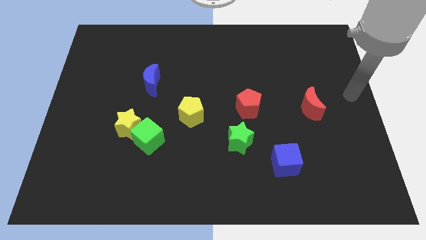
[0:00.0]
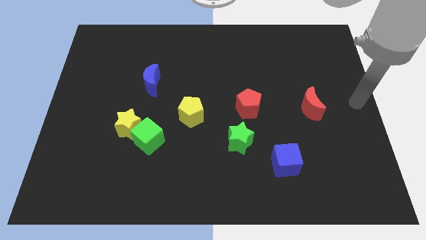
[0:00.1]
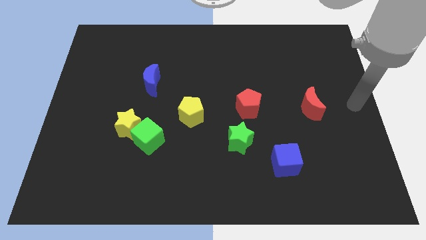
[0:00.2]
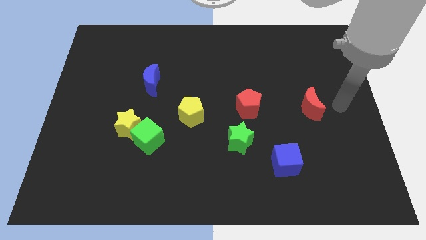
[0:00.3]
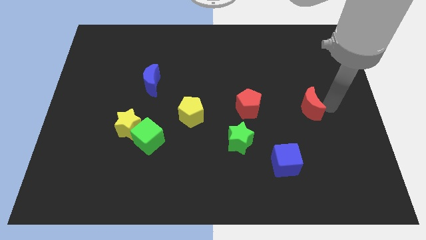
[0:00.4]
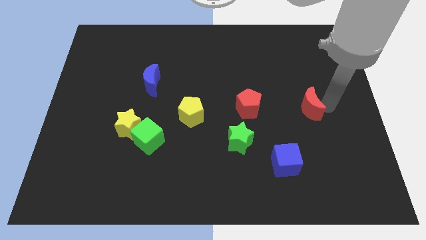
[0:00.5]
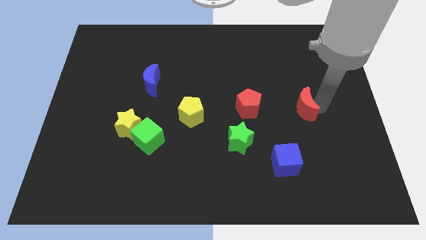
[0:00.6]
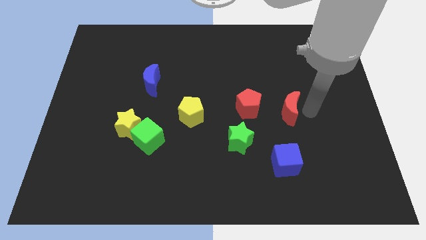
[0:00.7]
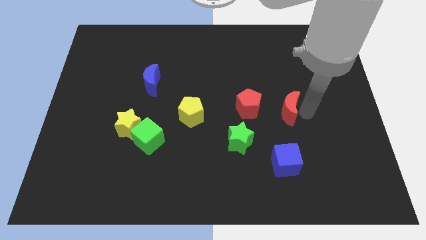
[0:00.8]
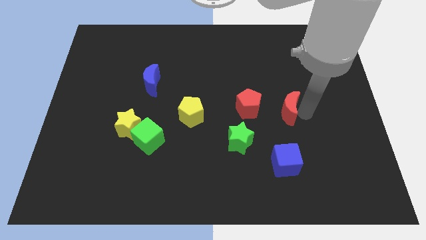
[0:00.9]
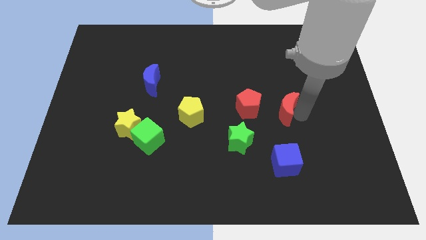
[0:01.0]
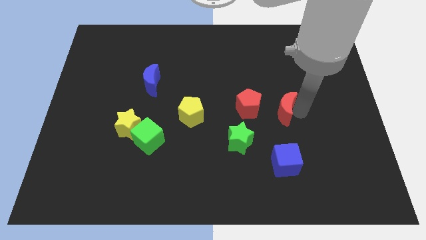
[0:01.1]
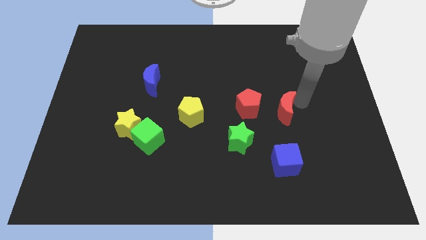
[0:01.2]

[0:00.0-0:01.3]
move red moon close to the red pentagon

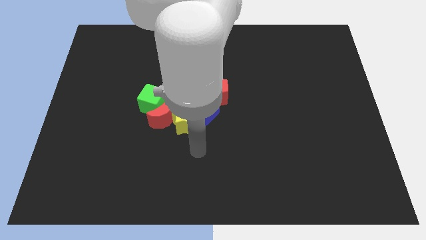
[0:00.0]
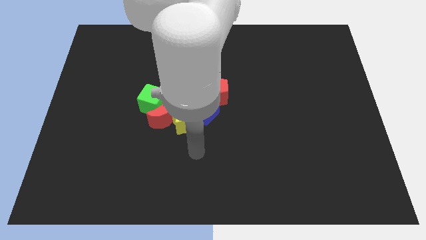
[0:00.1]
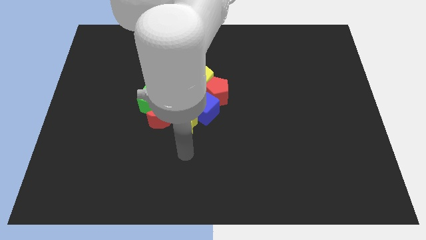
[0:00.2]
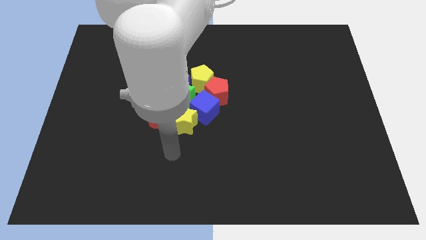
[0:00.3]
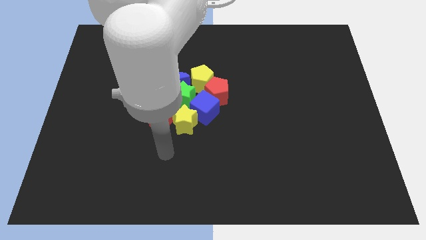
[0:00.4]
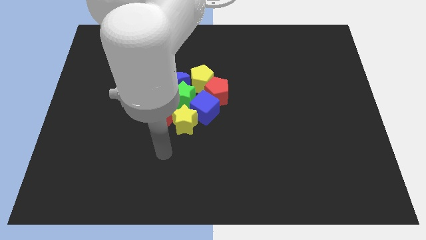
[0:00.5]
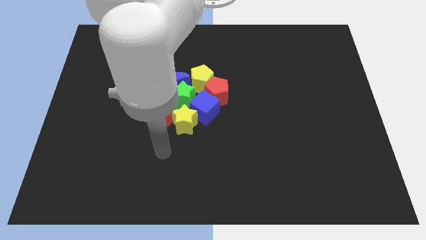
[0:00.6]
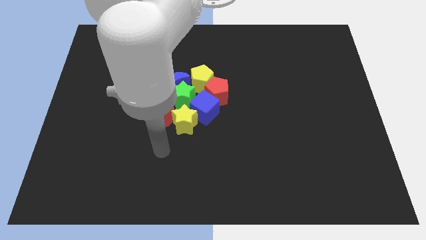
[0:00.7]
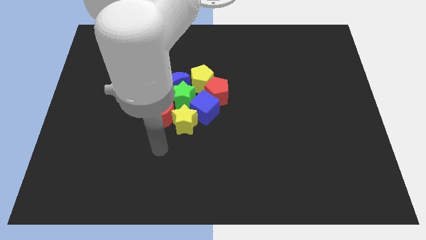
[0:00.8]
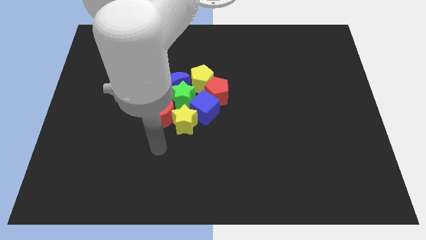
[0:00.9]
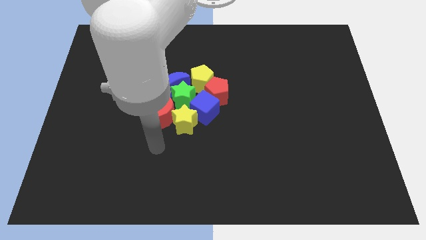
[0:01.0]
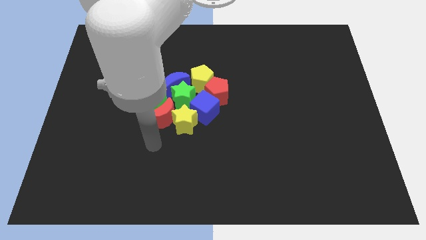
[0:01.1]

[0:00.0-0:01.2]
move the arm towards the bottom of the red moon

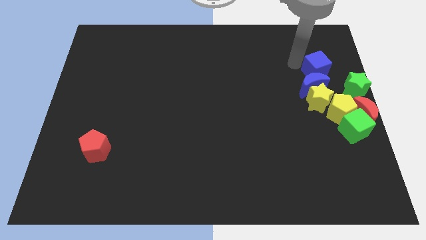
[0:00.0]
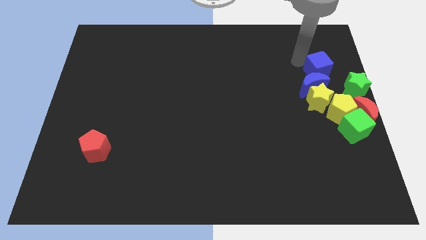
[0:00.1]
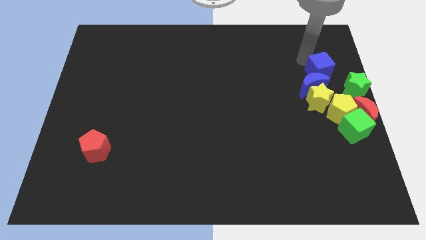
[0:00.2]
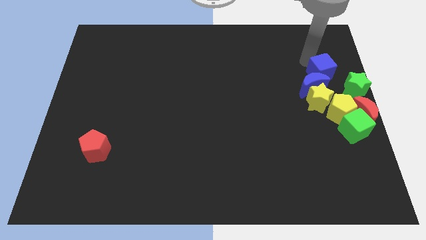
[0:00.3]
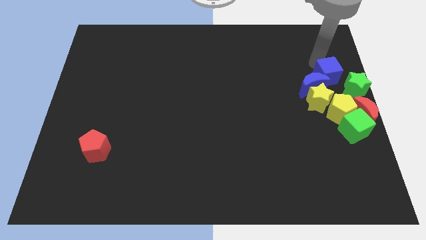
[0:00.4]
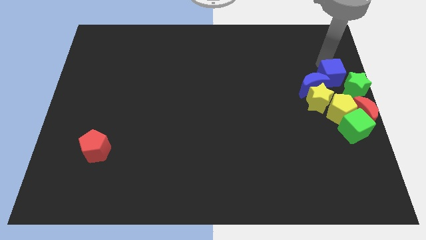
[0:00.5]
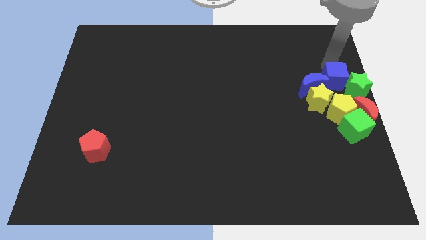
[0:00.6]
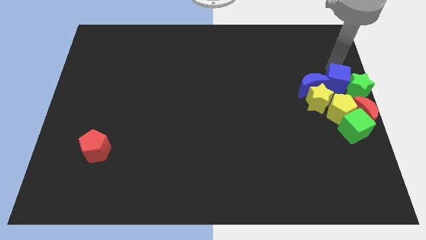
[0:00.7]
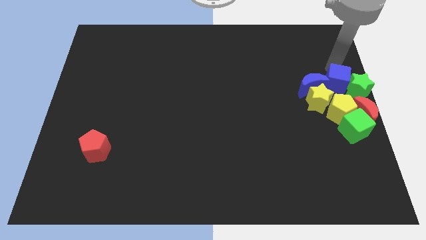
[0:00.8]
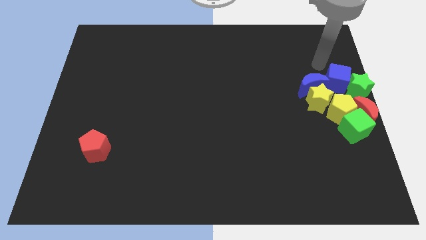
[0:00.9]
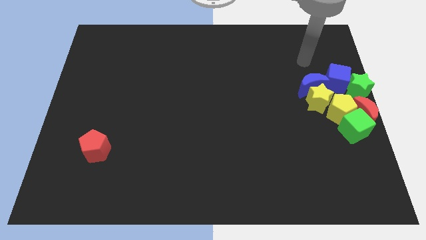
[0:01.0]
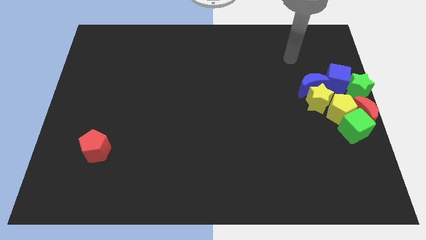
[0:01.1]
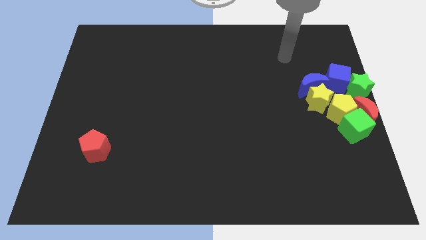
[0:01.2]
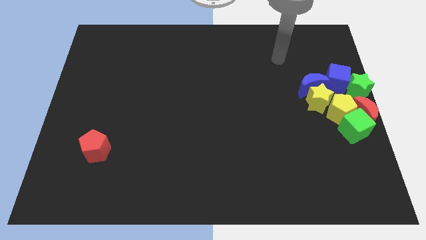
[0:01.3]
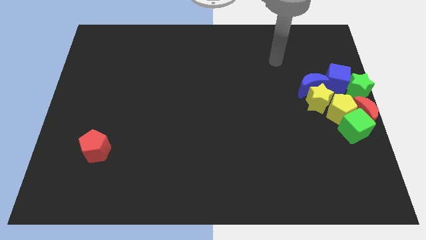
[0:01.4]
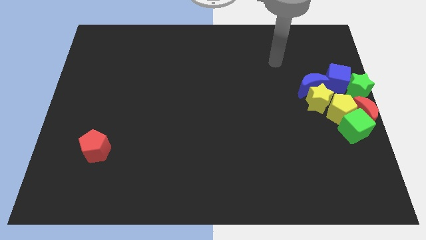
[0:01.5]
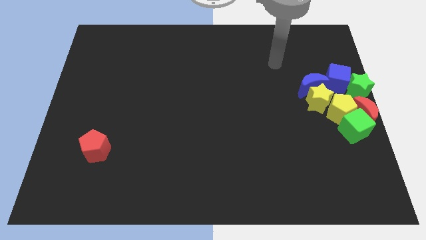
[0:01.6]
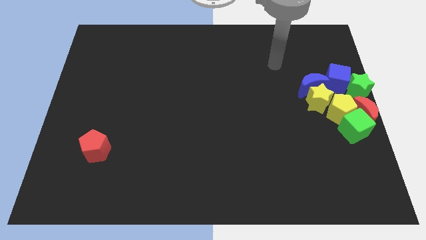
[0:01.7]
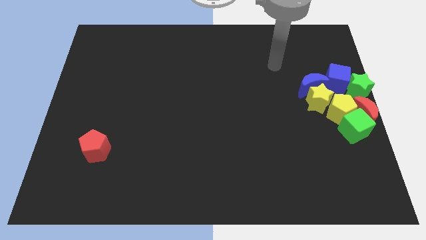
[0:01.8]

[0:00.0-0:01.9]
push the blue cube towards the green star

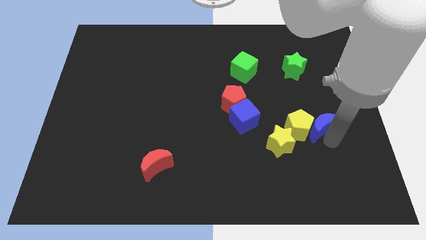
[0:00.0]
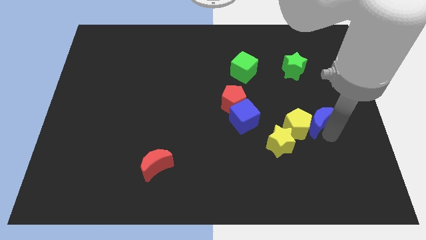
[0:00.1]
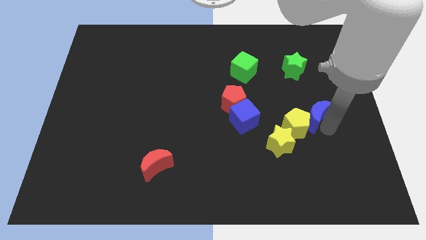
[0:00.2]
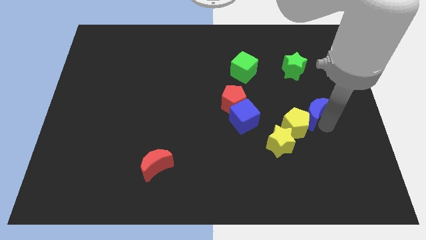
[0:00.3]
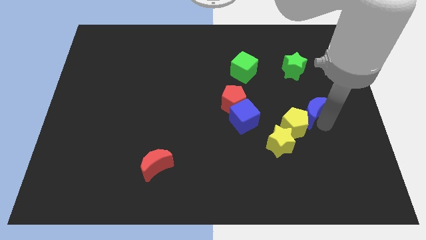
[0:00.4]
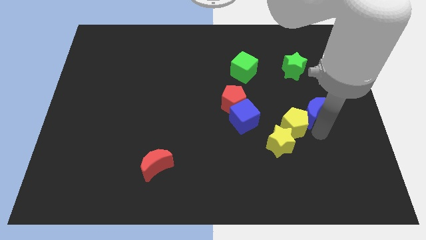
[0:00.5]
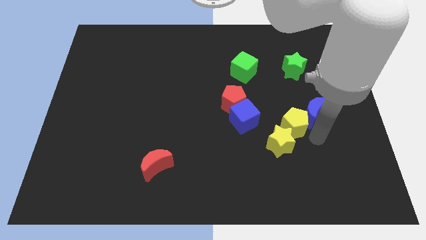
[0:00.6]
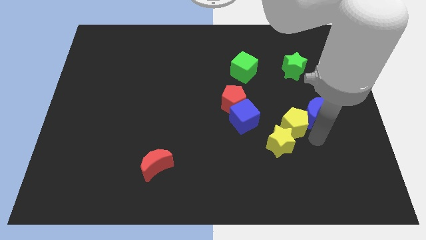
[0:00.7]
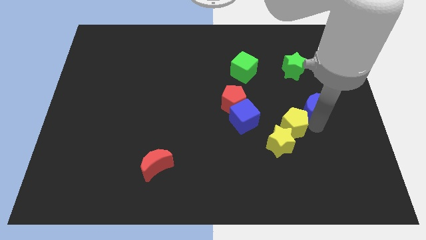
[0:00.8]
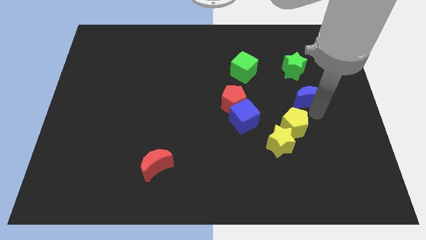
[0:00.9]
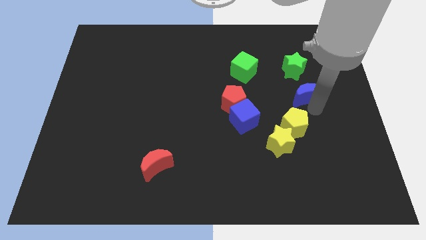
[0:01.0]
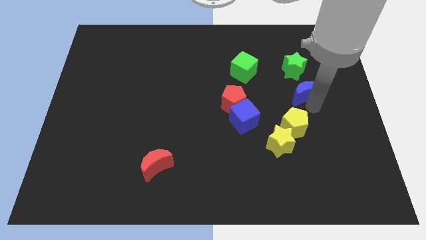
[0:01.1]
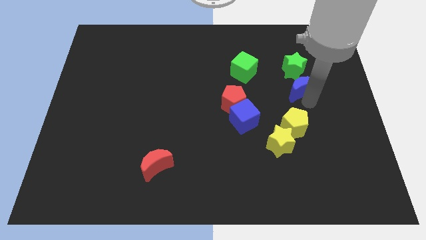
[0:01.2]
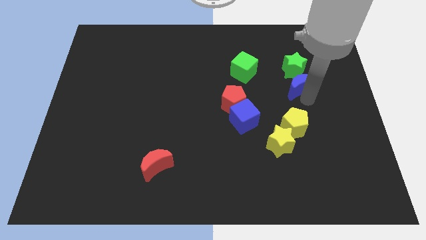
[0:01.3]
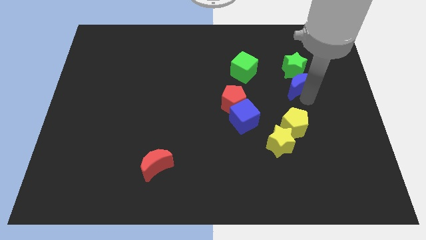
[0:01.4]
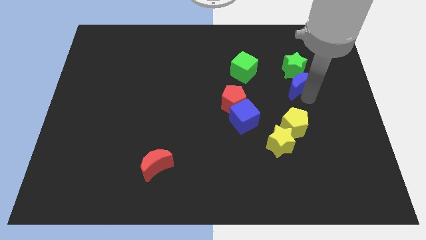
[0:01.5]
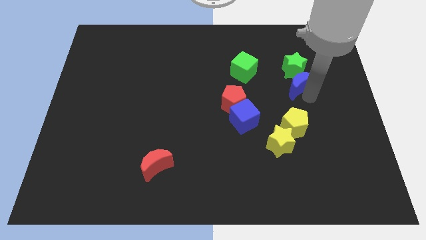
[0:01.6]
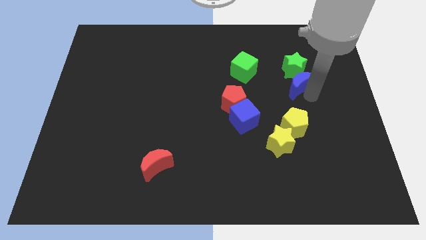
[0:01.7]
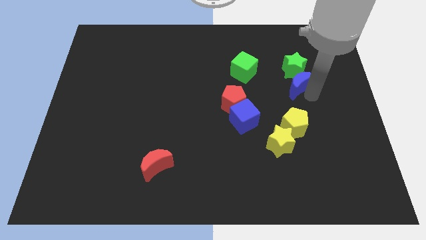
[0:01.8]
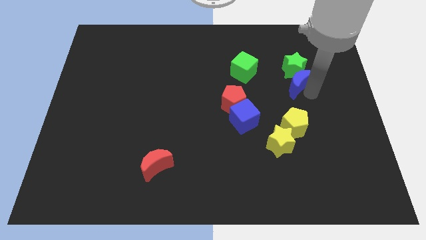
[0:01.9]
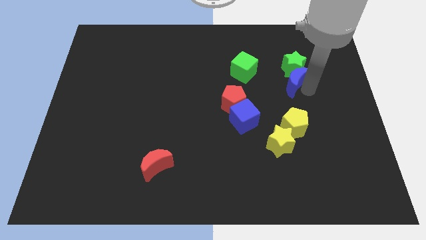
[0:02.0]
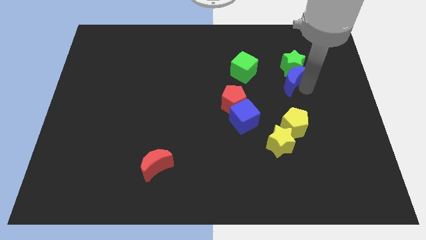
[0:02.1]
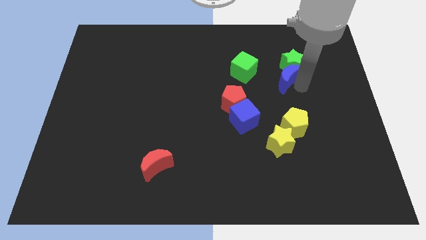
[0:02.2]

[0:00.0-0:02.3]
place blue crescent below green star

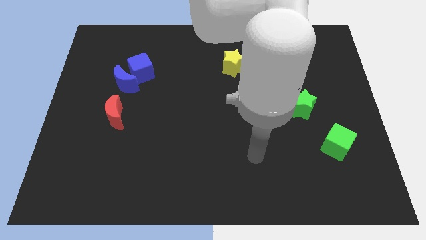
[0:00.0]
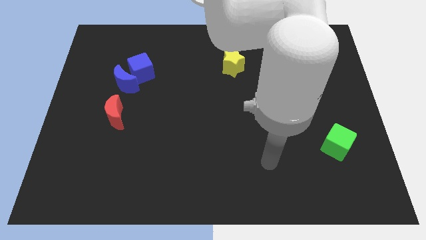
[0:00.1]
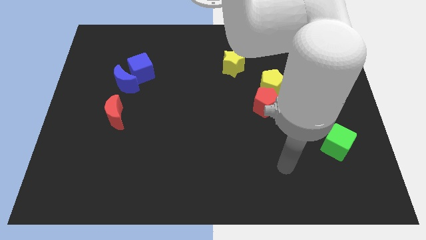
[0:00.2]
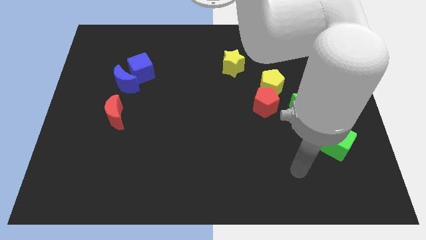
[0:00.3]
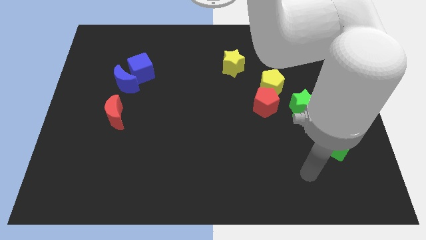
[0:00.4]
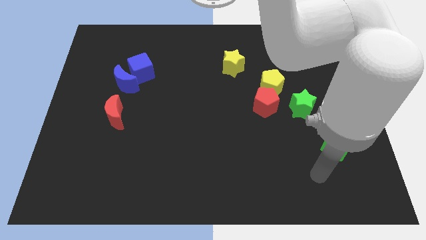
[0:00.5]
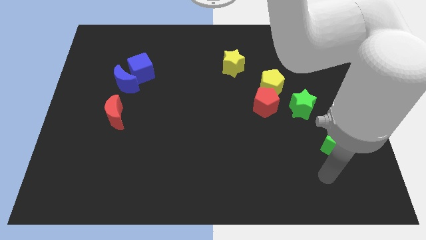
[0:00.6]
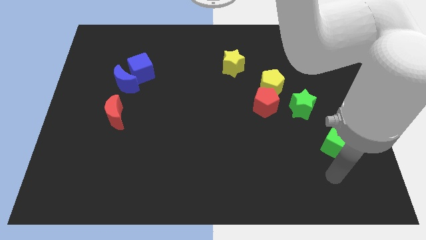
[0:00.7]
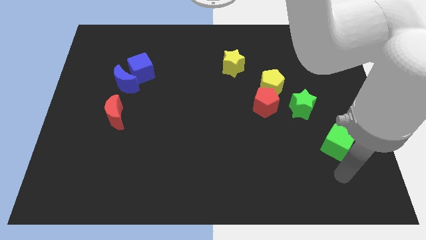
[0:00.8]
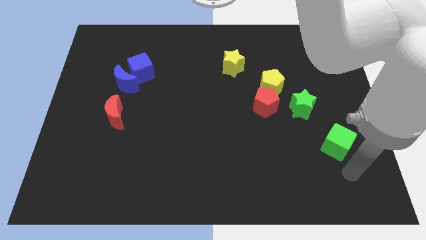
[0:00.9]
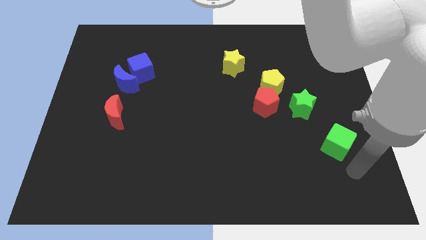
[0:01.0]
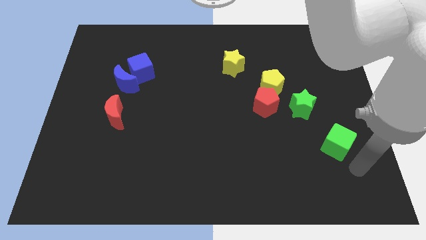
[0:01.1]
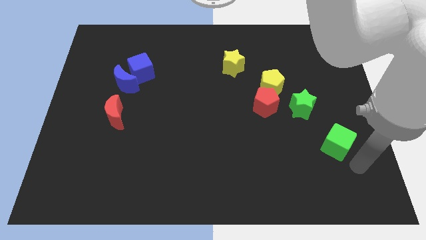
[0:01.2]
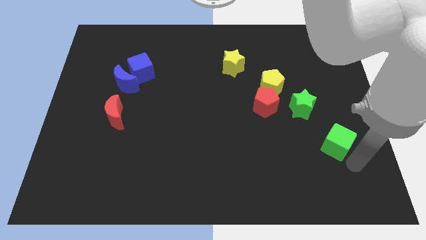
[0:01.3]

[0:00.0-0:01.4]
point your arm at the bottom right side of green cube

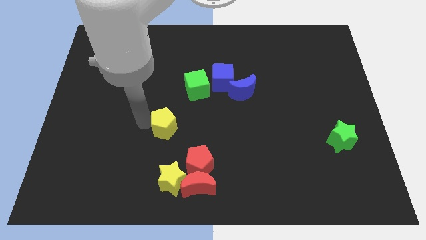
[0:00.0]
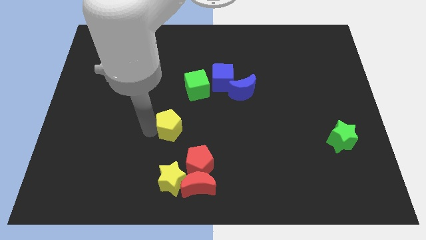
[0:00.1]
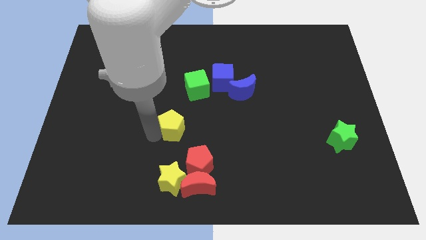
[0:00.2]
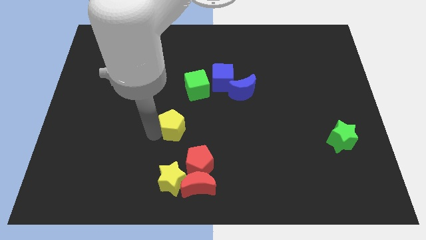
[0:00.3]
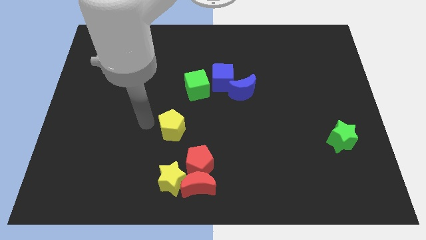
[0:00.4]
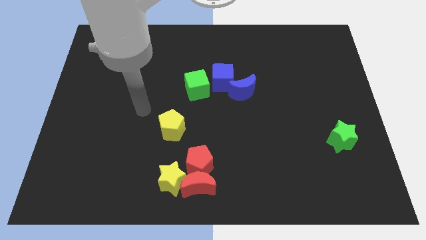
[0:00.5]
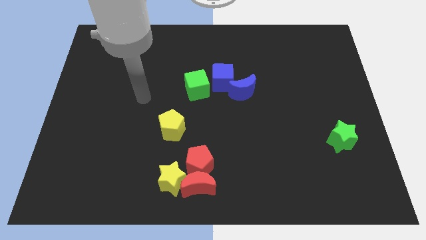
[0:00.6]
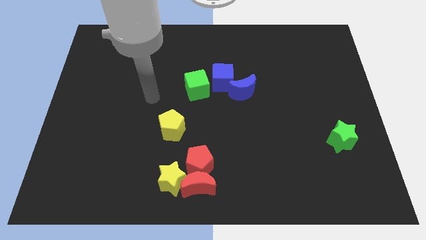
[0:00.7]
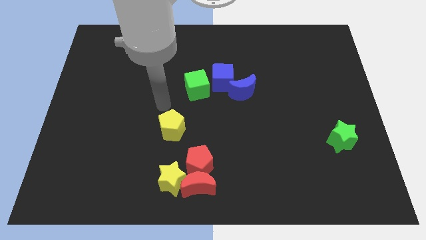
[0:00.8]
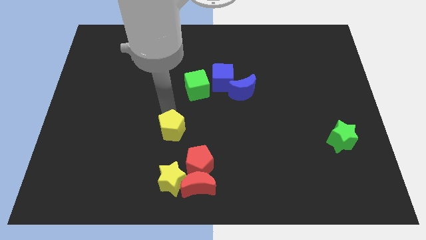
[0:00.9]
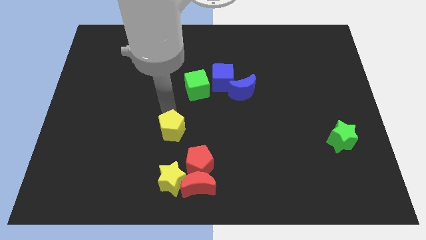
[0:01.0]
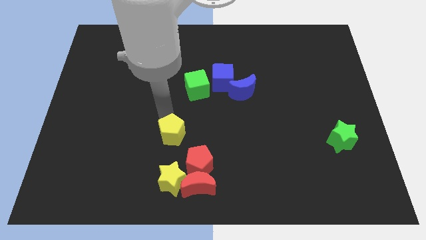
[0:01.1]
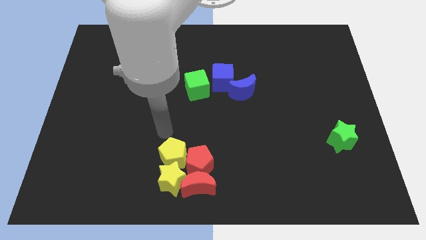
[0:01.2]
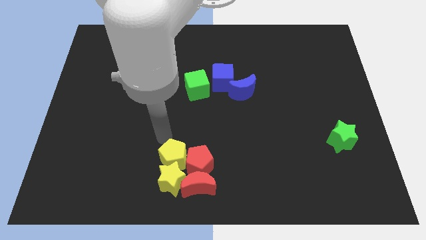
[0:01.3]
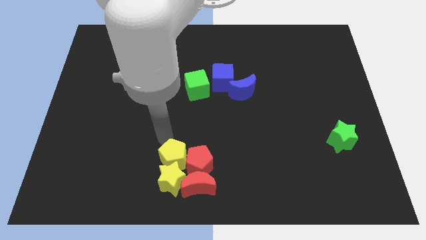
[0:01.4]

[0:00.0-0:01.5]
push the yellow pentagon into the group of blocks at the bottom side of the table
